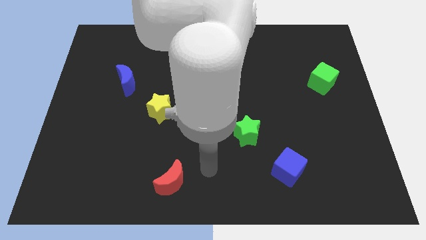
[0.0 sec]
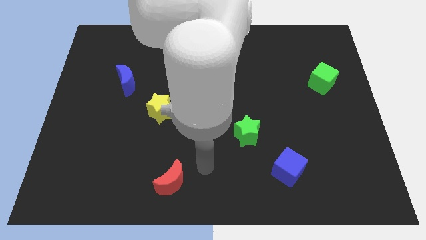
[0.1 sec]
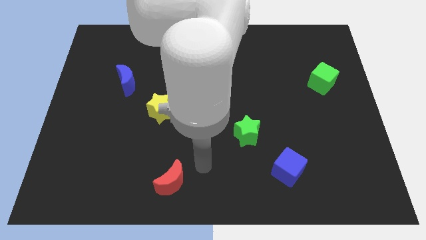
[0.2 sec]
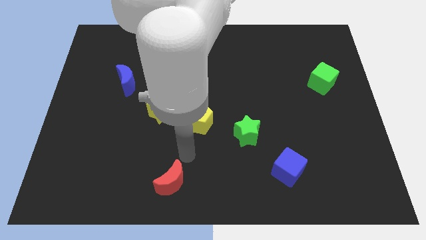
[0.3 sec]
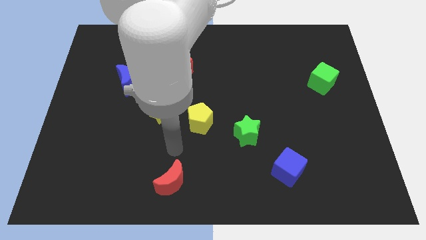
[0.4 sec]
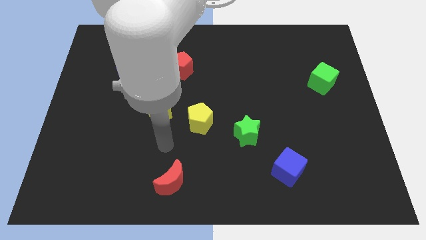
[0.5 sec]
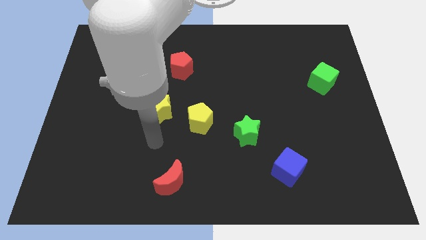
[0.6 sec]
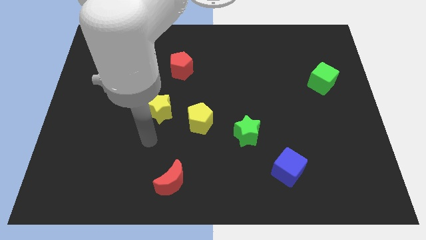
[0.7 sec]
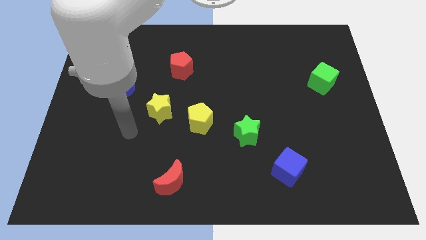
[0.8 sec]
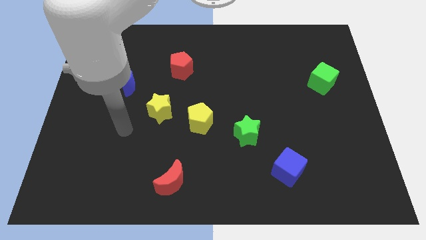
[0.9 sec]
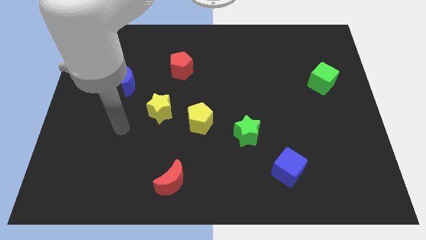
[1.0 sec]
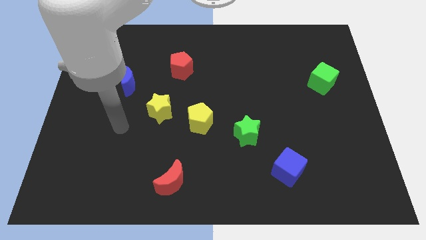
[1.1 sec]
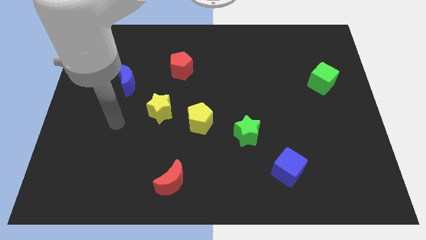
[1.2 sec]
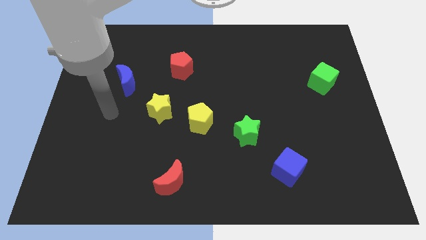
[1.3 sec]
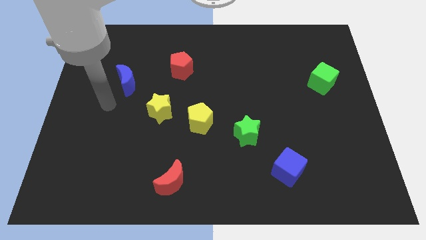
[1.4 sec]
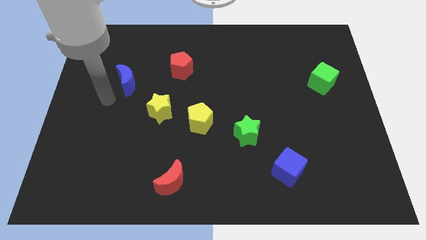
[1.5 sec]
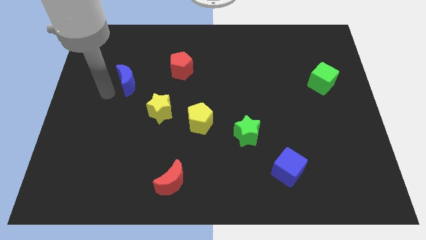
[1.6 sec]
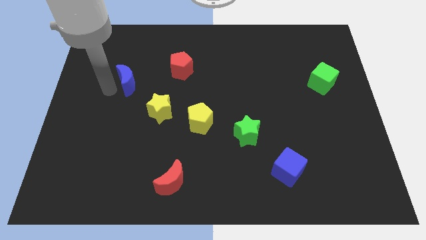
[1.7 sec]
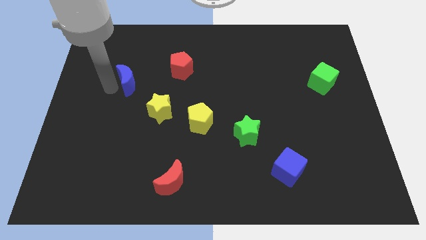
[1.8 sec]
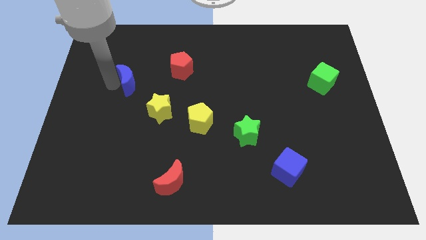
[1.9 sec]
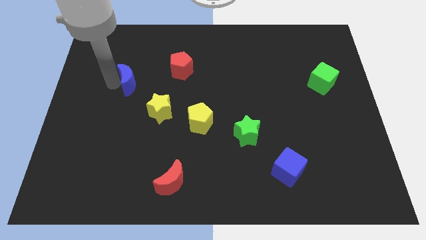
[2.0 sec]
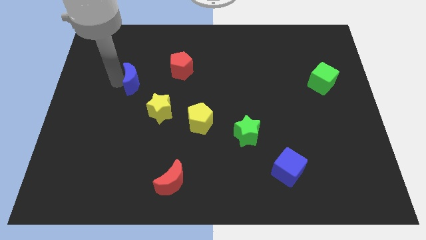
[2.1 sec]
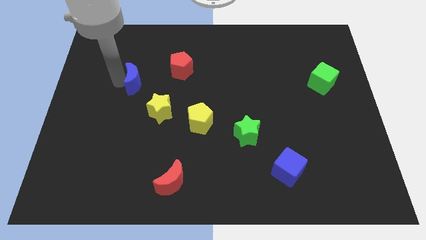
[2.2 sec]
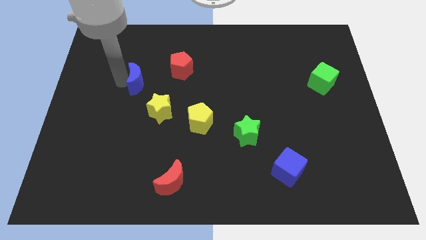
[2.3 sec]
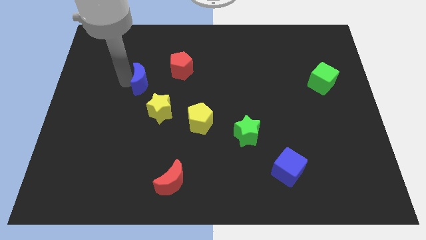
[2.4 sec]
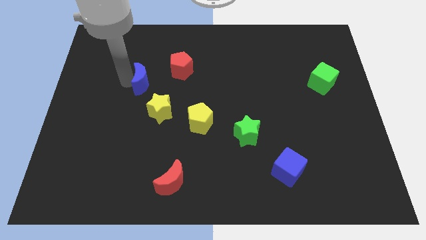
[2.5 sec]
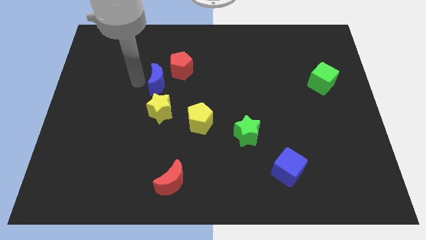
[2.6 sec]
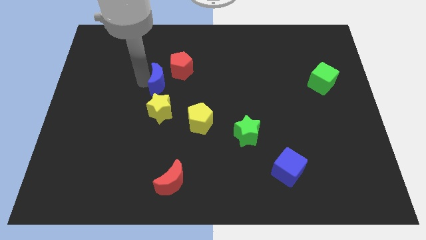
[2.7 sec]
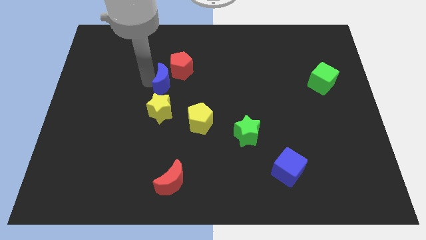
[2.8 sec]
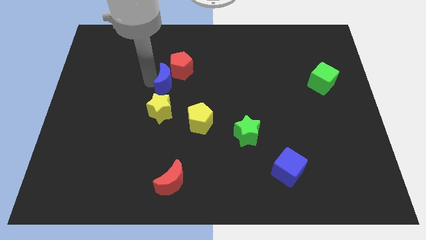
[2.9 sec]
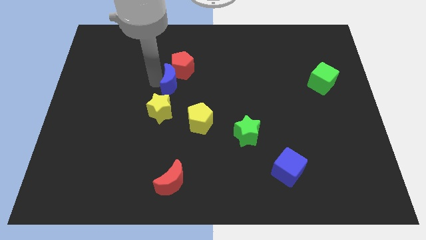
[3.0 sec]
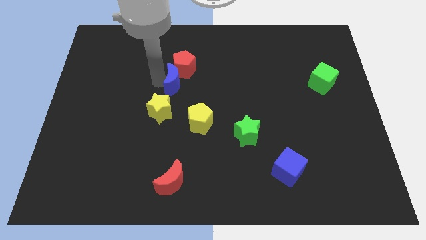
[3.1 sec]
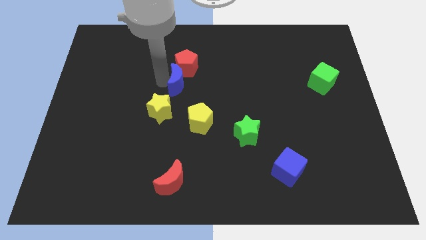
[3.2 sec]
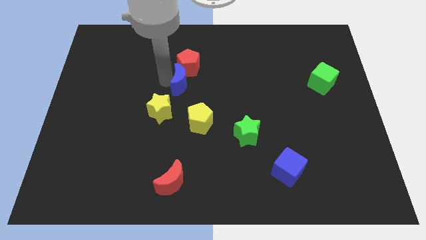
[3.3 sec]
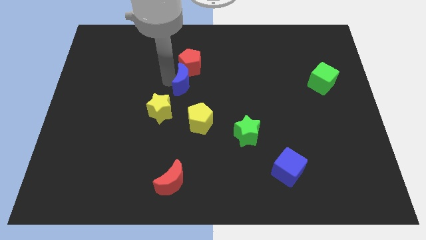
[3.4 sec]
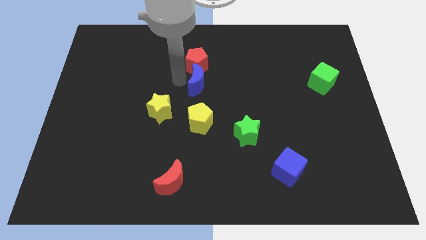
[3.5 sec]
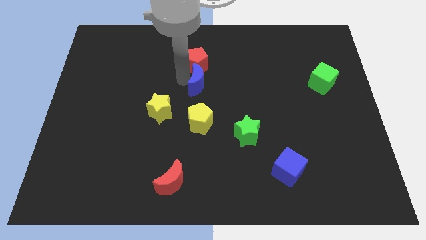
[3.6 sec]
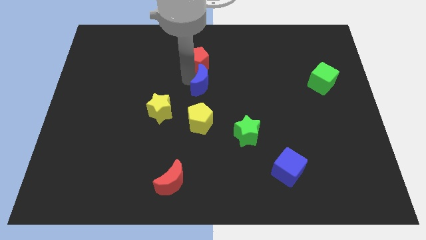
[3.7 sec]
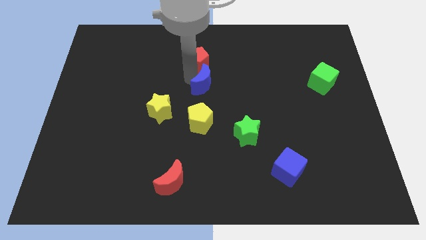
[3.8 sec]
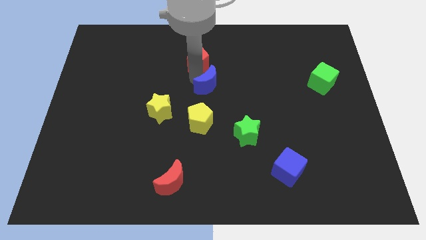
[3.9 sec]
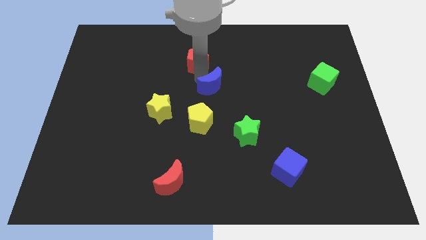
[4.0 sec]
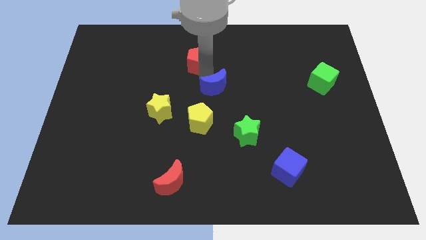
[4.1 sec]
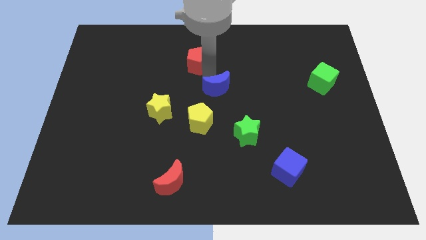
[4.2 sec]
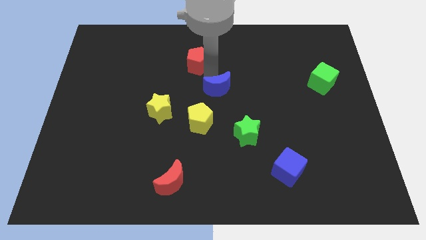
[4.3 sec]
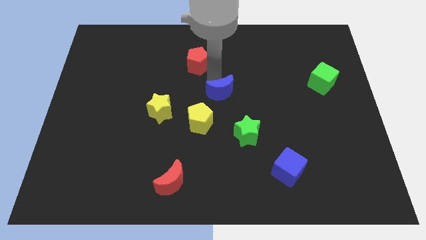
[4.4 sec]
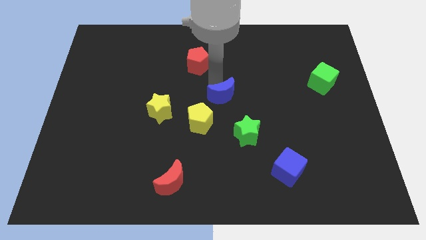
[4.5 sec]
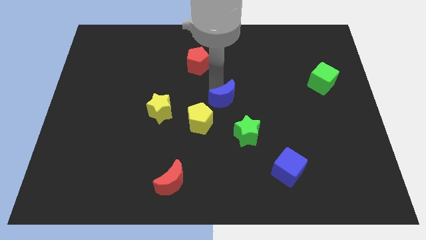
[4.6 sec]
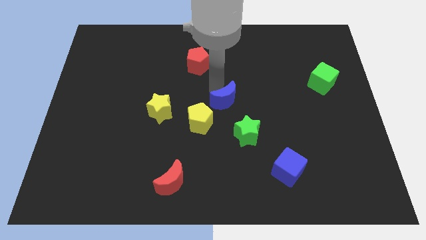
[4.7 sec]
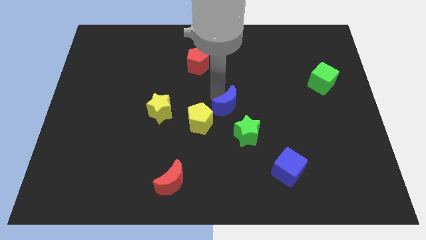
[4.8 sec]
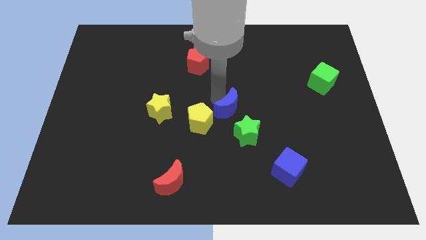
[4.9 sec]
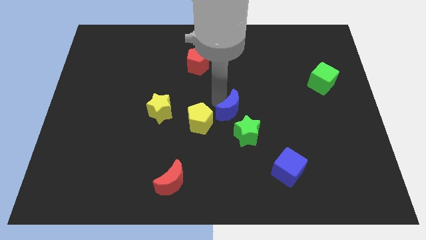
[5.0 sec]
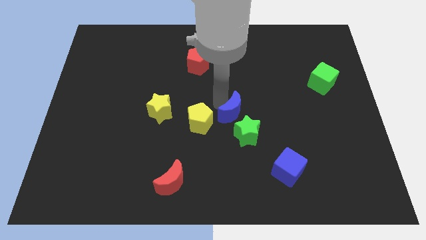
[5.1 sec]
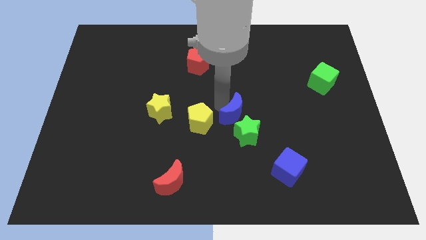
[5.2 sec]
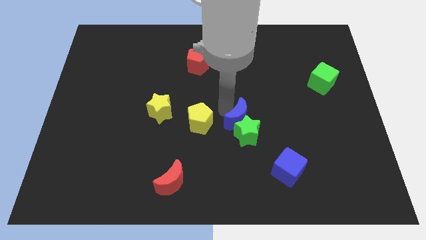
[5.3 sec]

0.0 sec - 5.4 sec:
put the blue moon to the green star

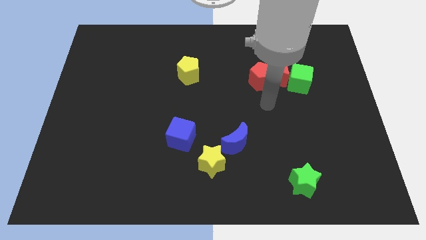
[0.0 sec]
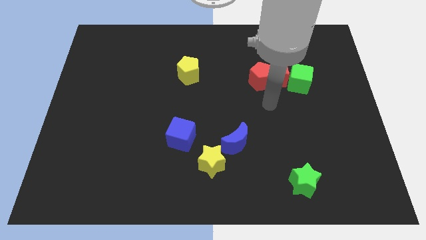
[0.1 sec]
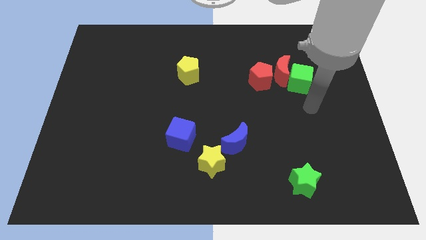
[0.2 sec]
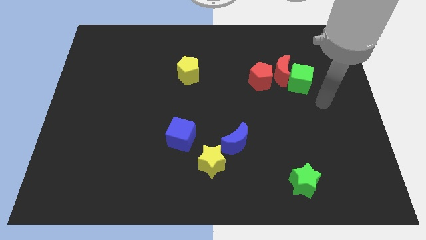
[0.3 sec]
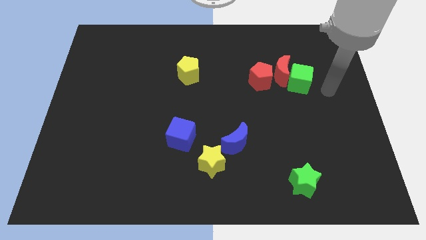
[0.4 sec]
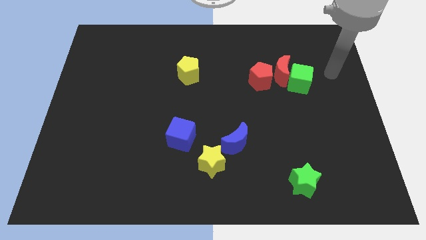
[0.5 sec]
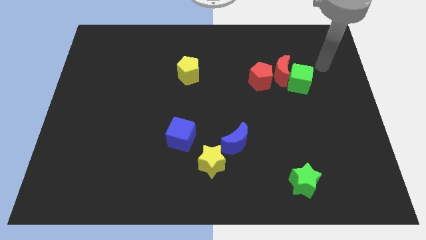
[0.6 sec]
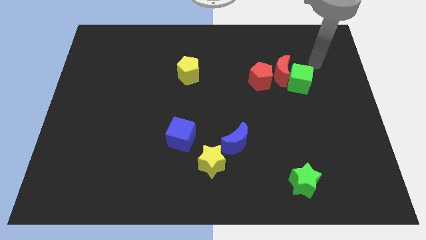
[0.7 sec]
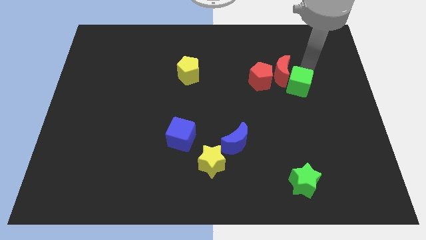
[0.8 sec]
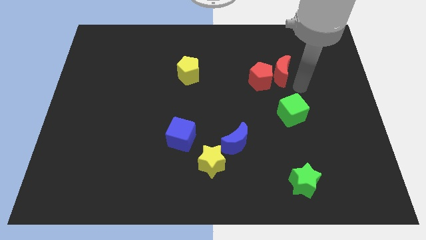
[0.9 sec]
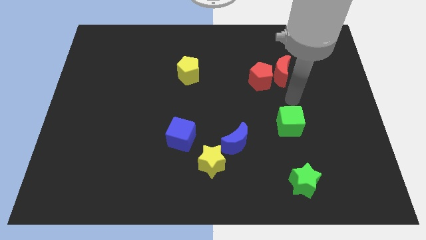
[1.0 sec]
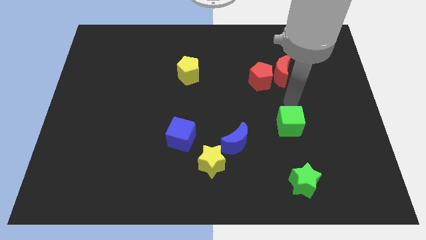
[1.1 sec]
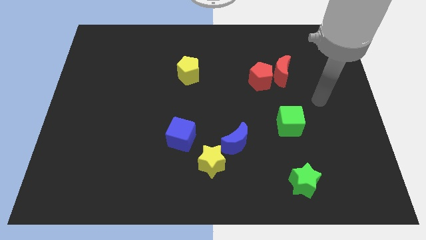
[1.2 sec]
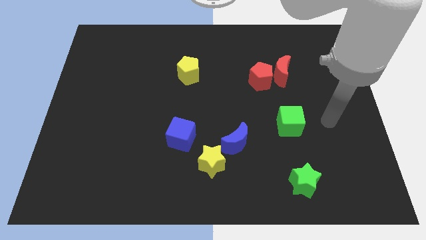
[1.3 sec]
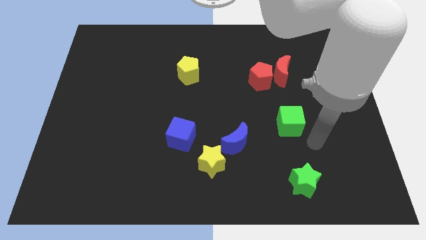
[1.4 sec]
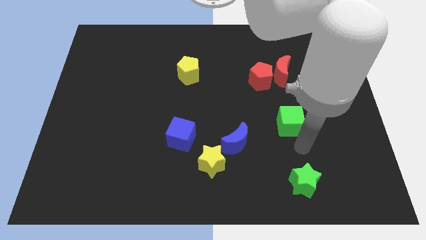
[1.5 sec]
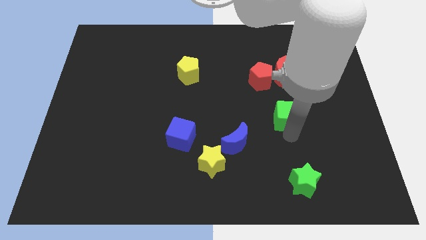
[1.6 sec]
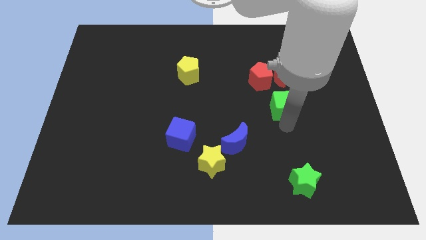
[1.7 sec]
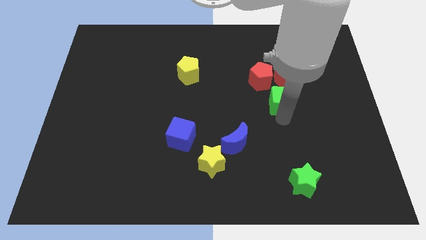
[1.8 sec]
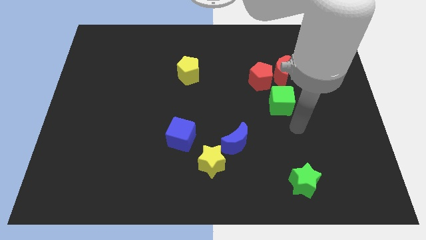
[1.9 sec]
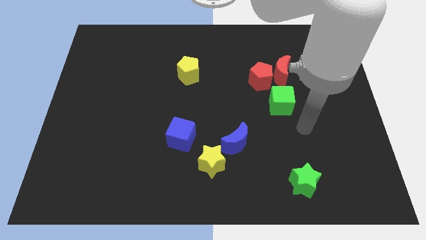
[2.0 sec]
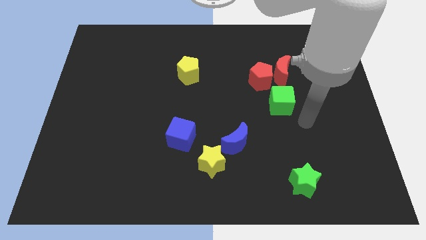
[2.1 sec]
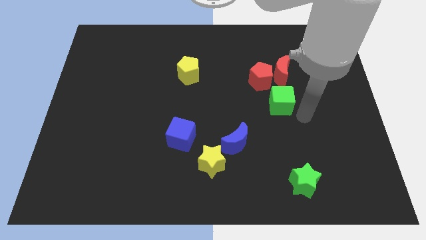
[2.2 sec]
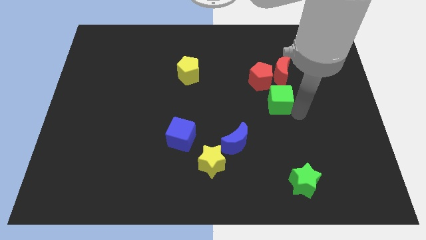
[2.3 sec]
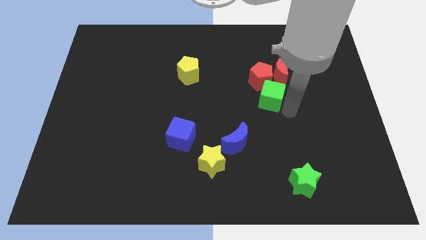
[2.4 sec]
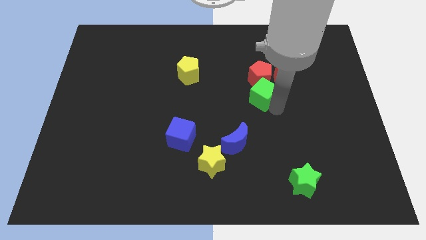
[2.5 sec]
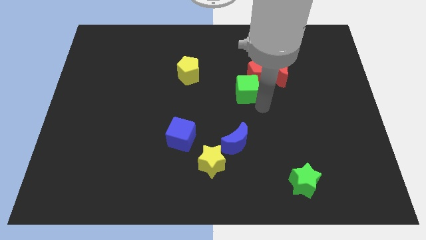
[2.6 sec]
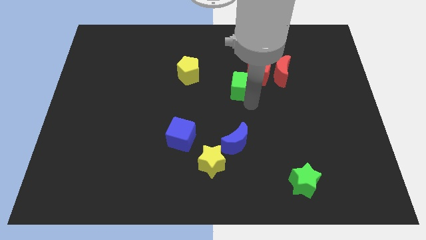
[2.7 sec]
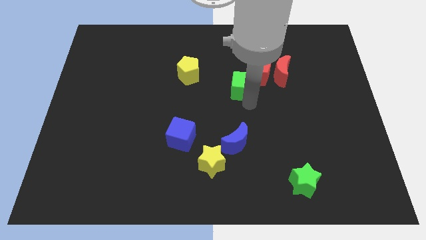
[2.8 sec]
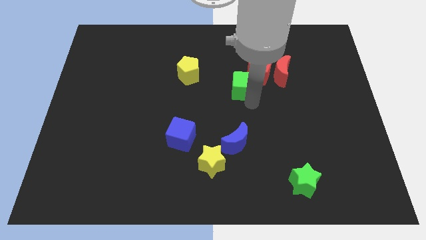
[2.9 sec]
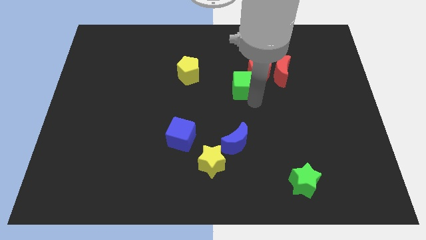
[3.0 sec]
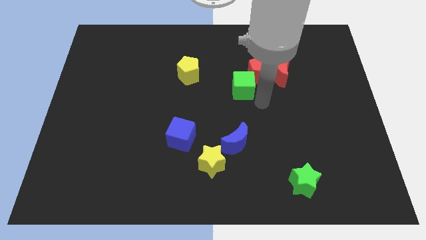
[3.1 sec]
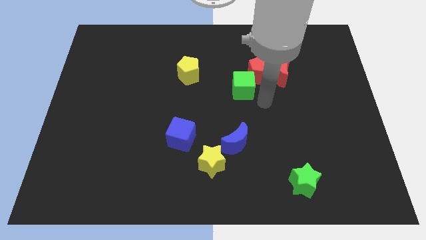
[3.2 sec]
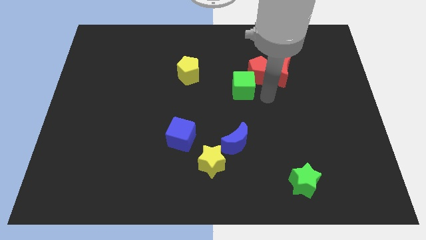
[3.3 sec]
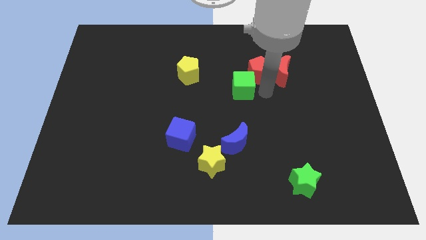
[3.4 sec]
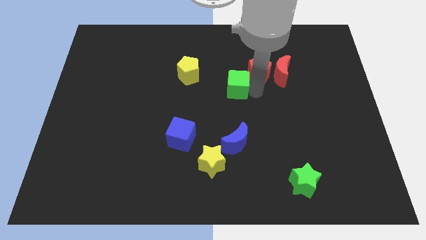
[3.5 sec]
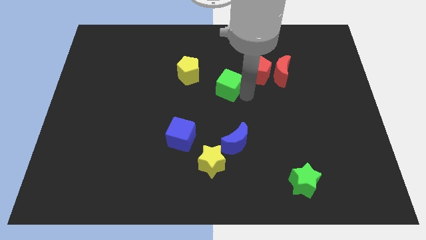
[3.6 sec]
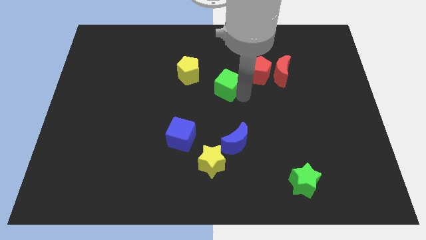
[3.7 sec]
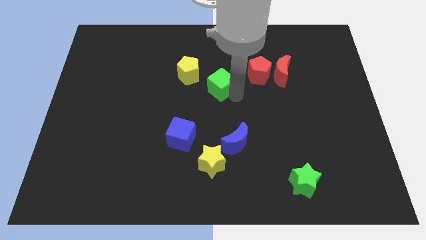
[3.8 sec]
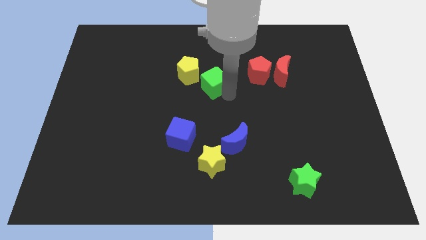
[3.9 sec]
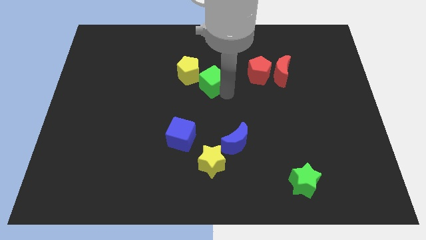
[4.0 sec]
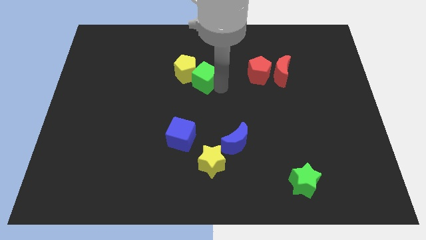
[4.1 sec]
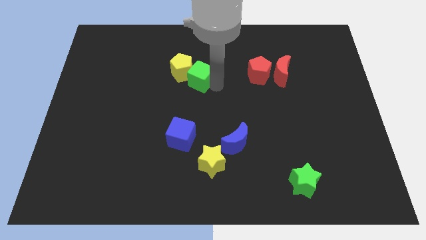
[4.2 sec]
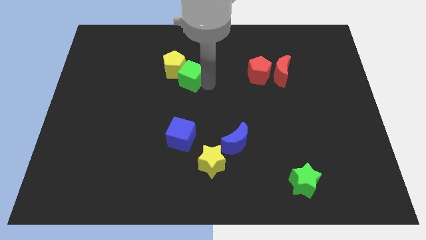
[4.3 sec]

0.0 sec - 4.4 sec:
push the green cube towards the yellow pentagon
